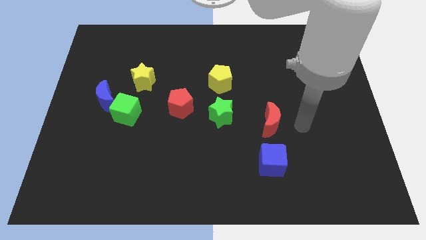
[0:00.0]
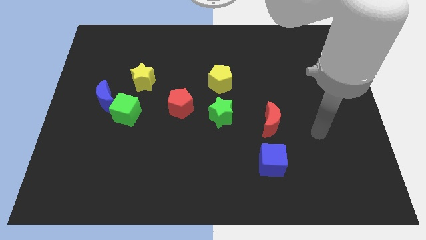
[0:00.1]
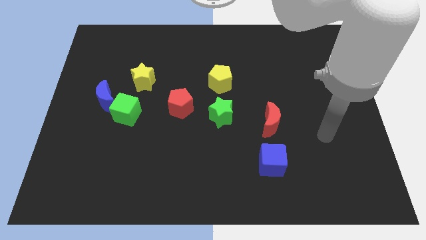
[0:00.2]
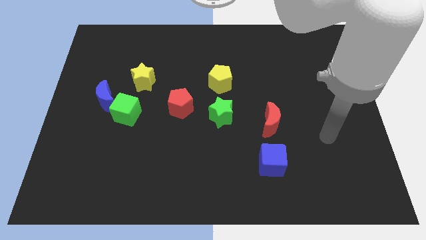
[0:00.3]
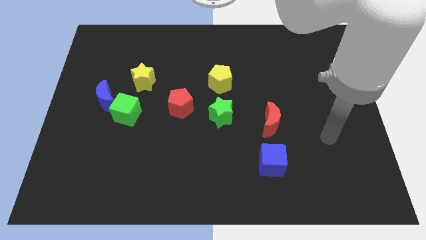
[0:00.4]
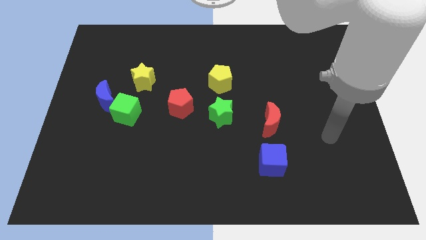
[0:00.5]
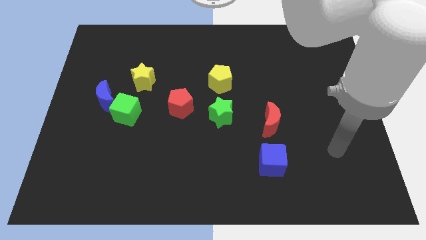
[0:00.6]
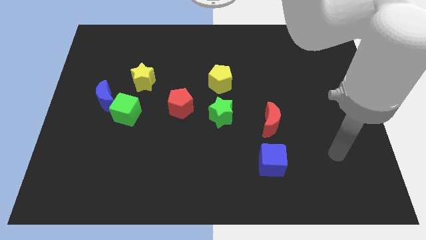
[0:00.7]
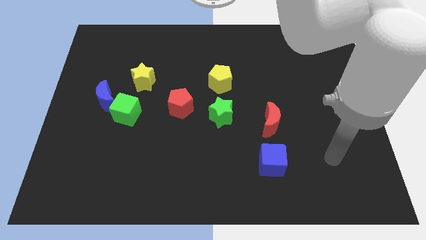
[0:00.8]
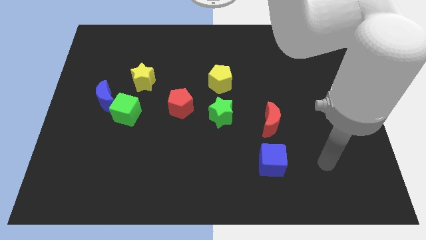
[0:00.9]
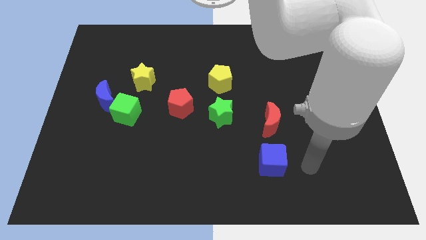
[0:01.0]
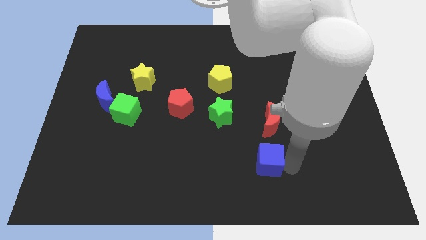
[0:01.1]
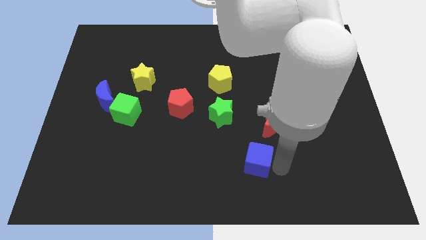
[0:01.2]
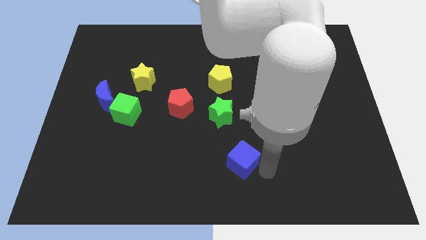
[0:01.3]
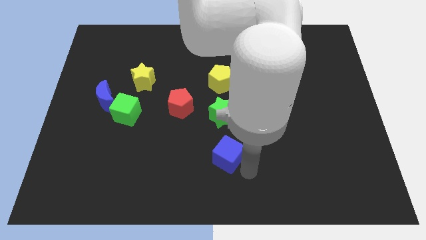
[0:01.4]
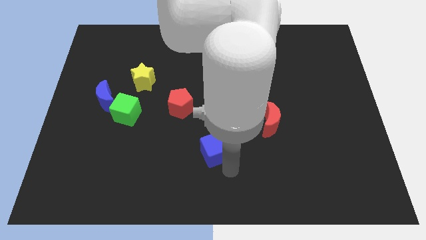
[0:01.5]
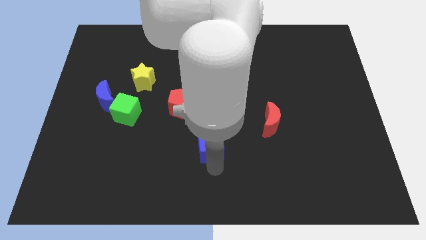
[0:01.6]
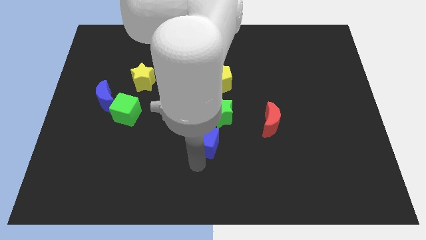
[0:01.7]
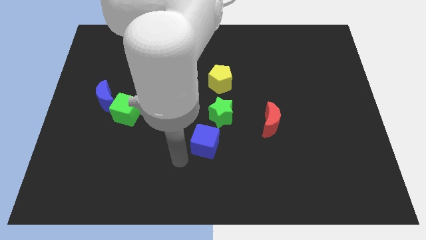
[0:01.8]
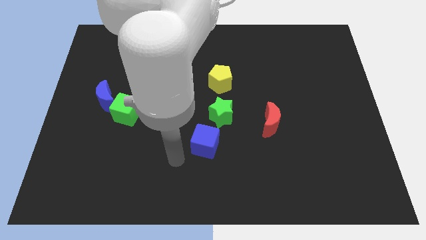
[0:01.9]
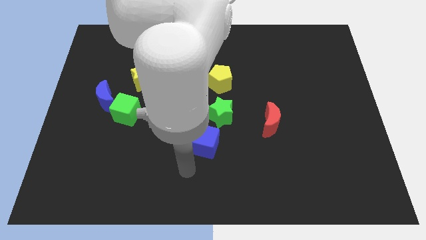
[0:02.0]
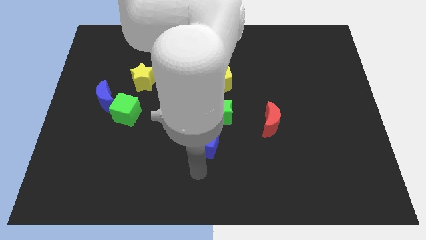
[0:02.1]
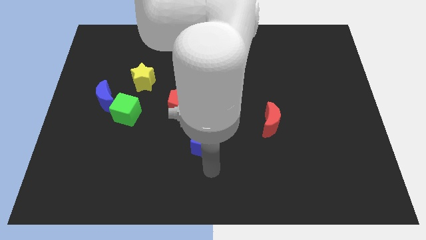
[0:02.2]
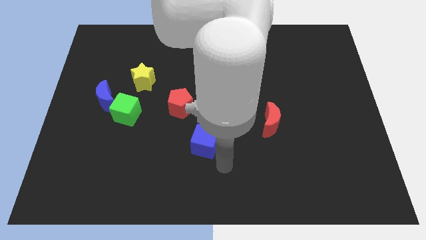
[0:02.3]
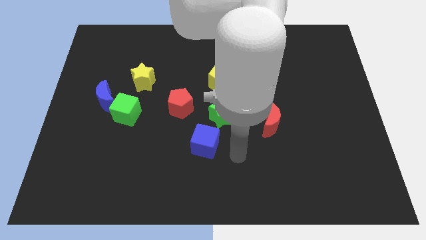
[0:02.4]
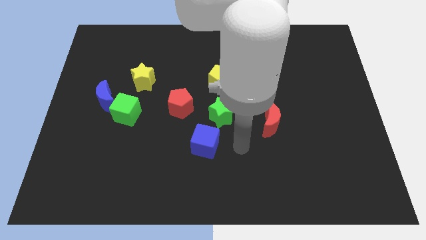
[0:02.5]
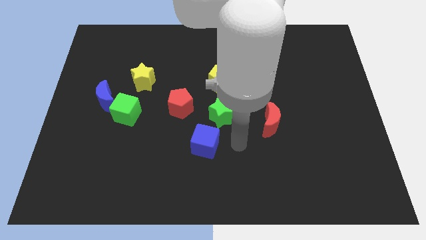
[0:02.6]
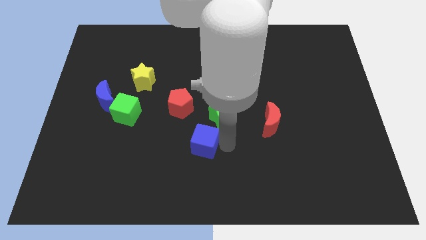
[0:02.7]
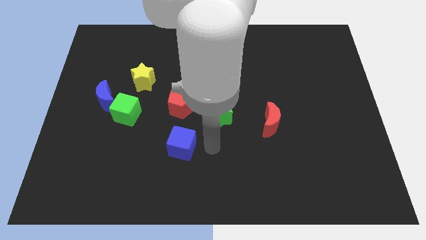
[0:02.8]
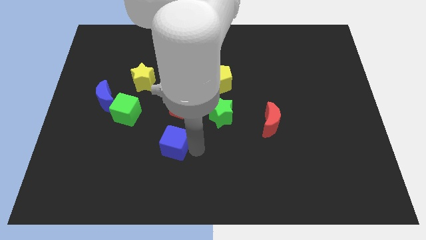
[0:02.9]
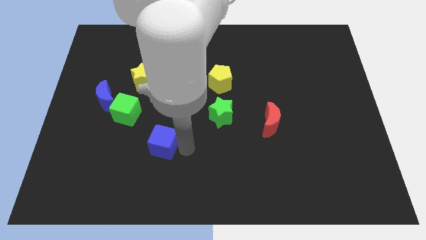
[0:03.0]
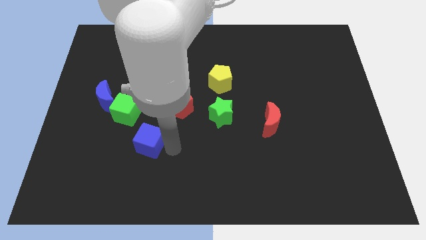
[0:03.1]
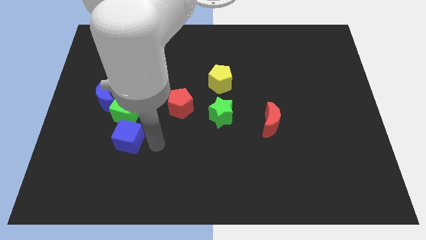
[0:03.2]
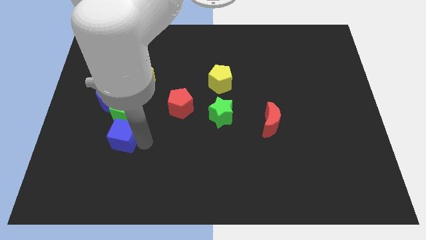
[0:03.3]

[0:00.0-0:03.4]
place the blue cube below the green cube

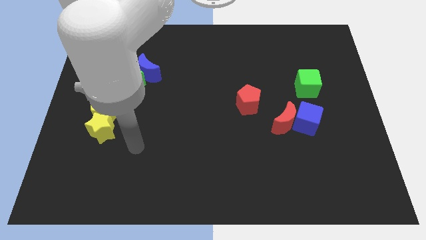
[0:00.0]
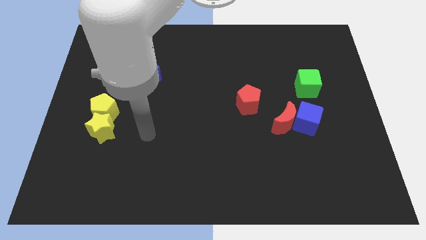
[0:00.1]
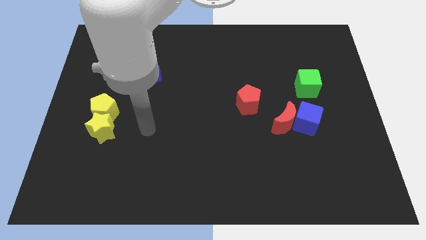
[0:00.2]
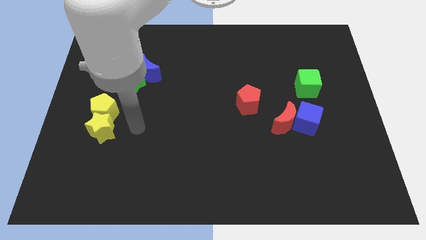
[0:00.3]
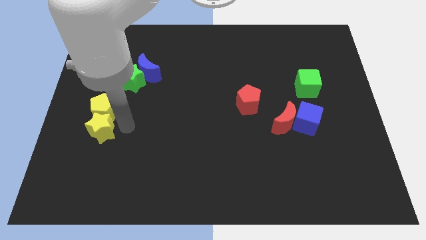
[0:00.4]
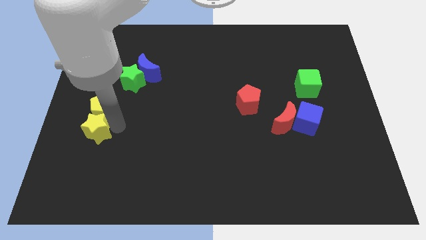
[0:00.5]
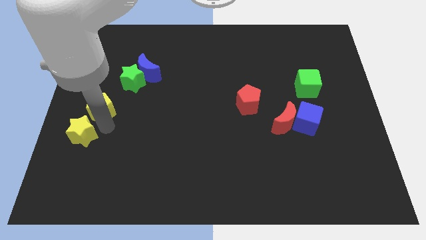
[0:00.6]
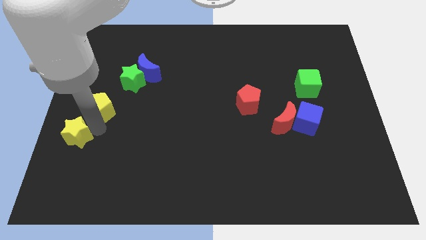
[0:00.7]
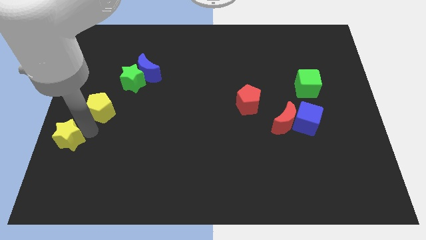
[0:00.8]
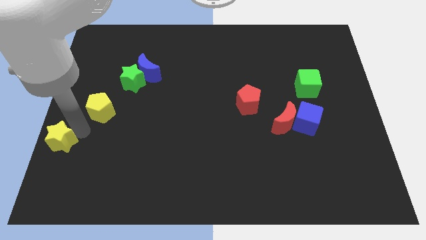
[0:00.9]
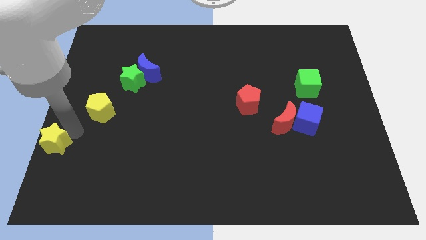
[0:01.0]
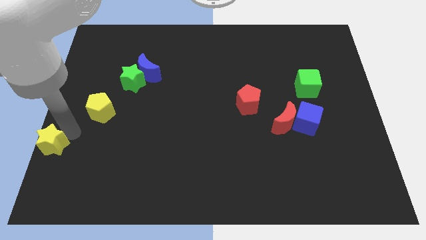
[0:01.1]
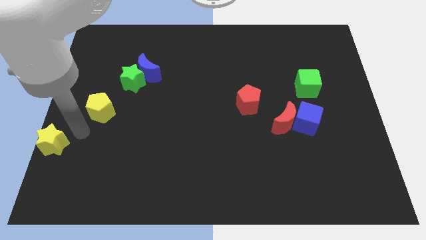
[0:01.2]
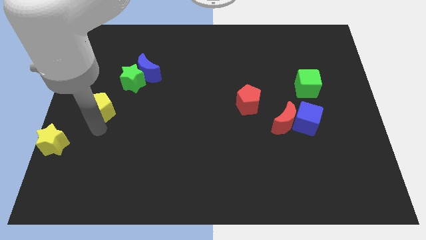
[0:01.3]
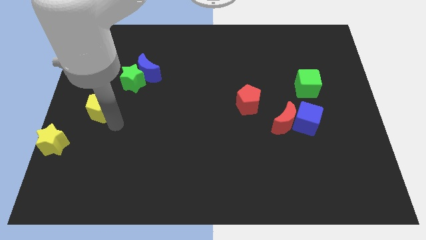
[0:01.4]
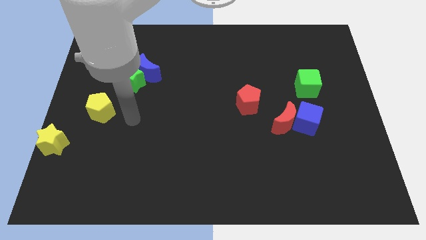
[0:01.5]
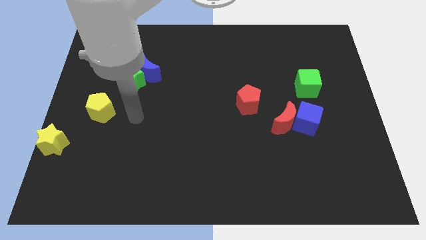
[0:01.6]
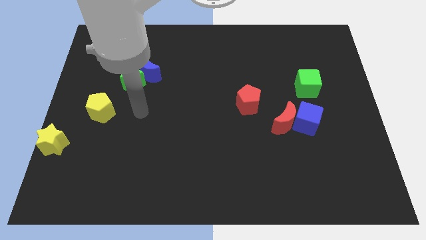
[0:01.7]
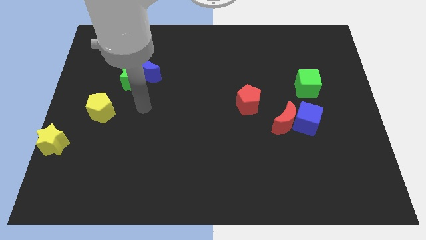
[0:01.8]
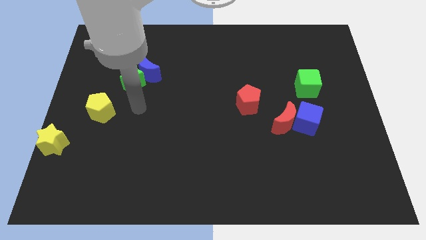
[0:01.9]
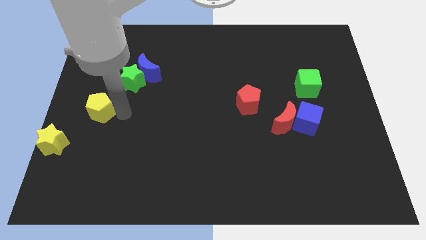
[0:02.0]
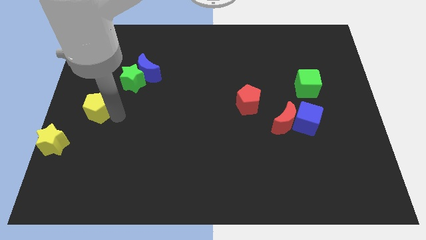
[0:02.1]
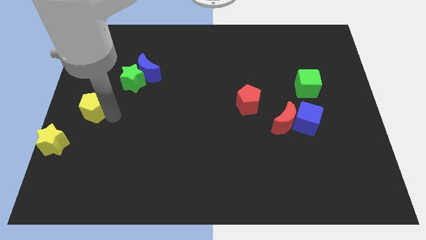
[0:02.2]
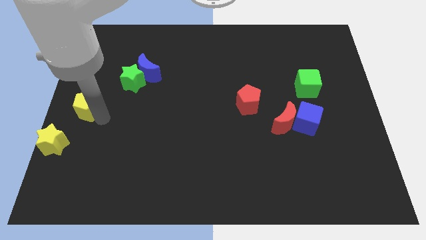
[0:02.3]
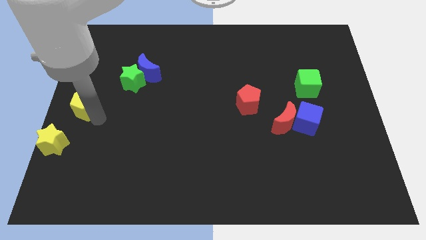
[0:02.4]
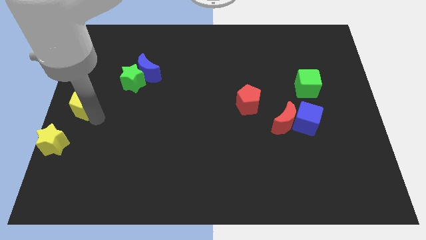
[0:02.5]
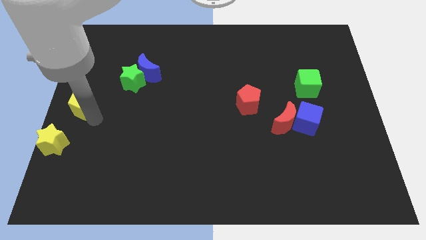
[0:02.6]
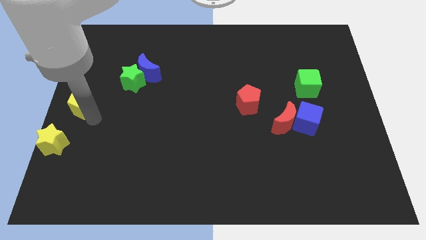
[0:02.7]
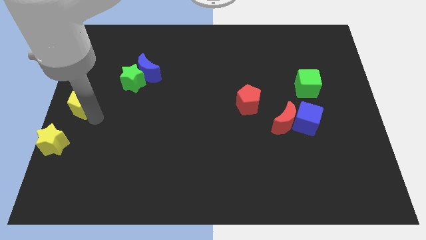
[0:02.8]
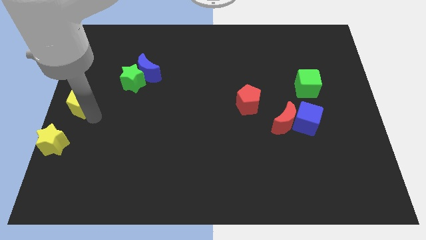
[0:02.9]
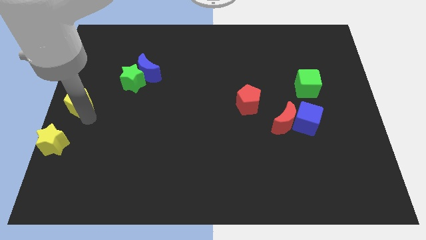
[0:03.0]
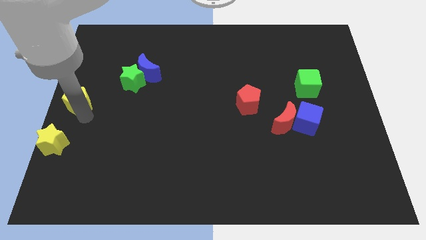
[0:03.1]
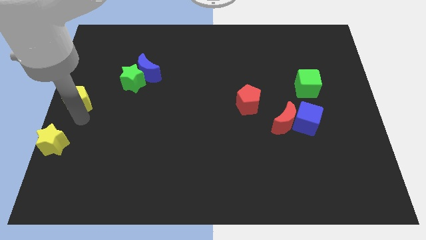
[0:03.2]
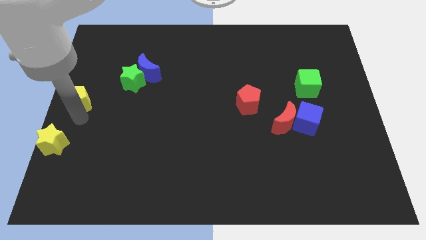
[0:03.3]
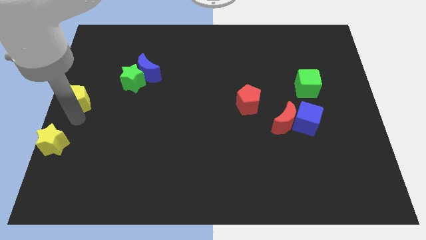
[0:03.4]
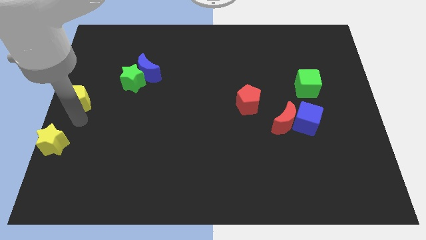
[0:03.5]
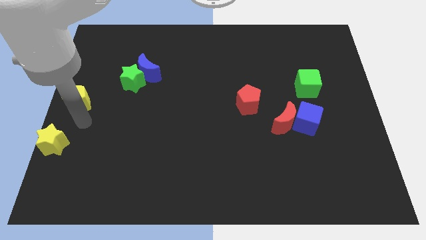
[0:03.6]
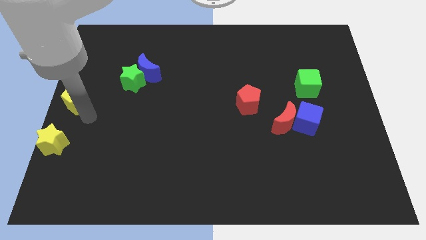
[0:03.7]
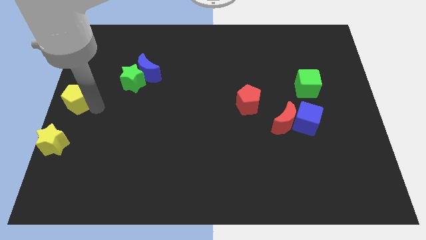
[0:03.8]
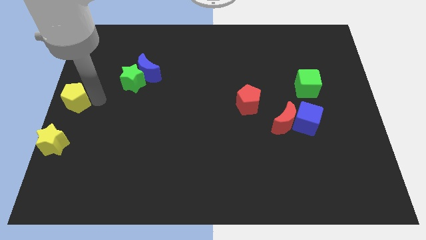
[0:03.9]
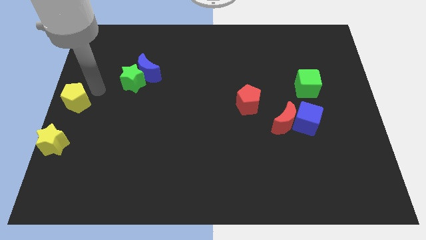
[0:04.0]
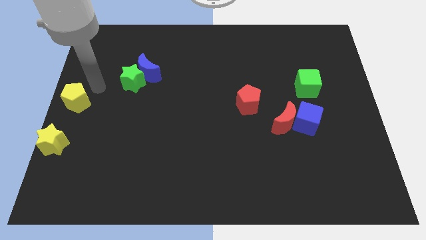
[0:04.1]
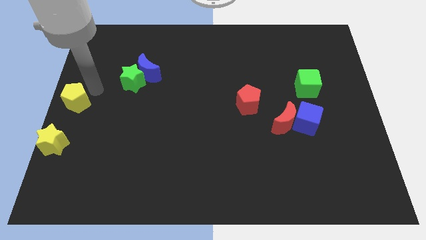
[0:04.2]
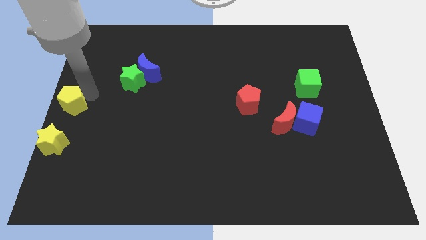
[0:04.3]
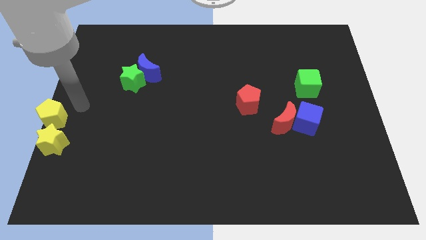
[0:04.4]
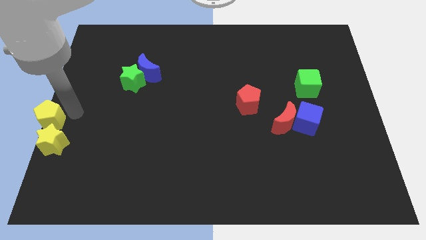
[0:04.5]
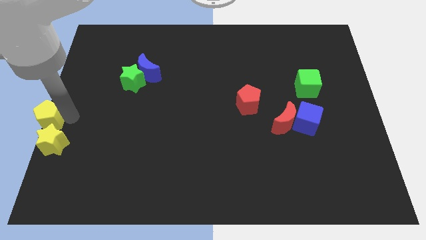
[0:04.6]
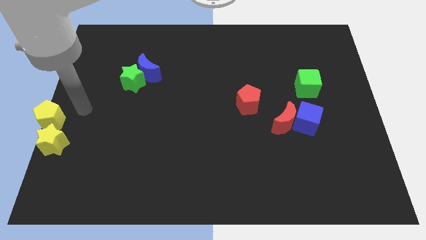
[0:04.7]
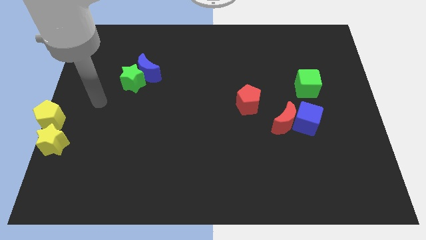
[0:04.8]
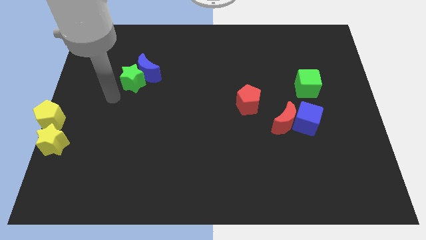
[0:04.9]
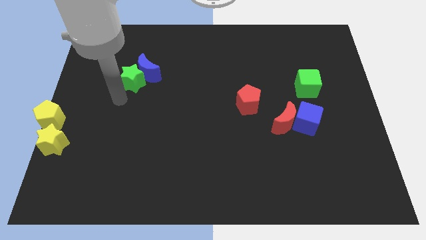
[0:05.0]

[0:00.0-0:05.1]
move the yellow star and yellow pentagon to the left center

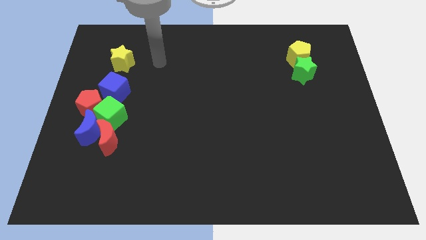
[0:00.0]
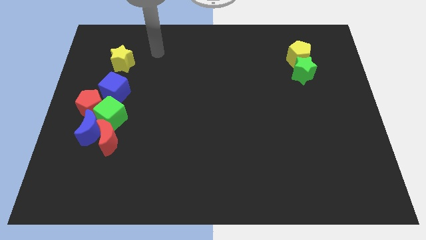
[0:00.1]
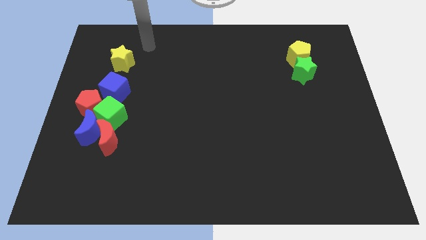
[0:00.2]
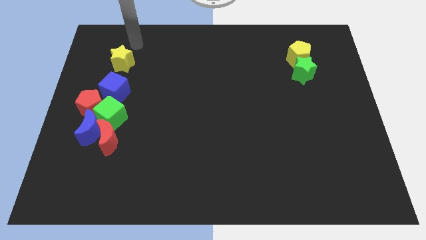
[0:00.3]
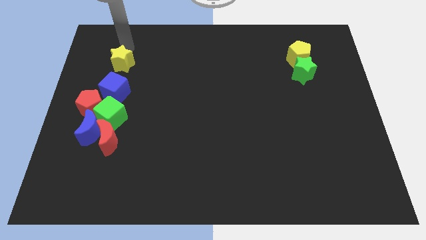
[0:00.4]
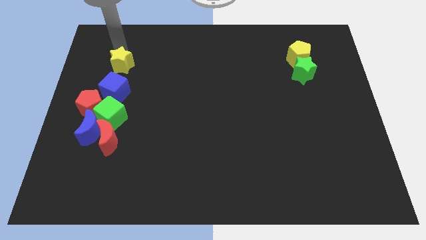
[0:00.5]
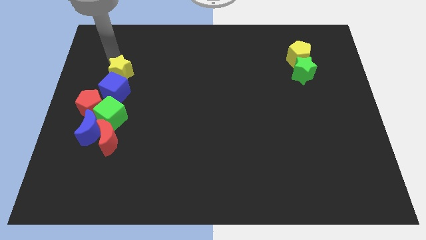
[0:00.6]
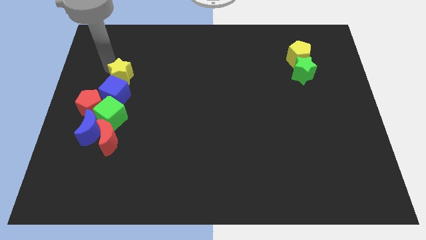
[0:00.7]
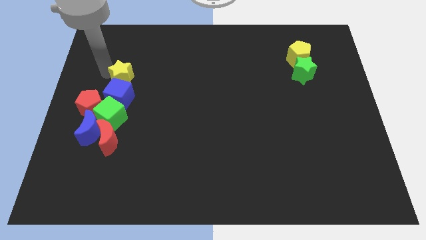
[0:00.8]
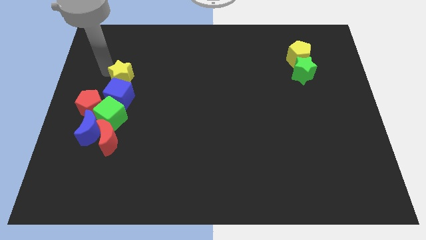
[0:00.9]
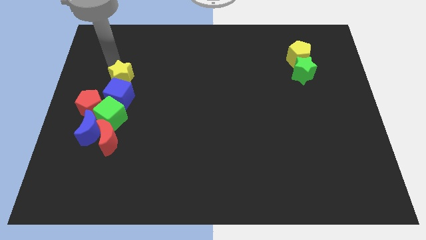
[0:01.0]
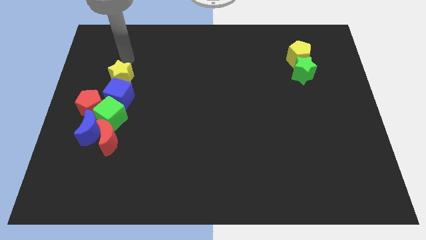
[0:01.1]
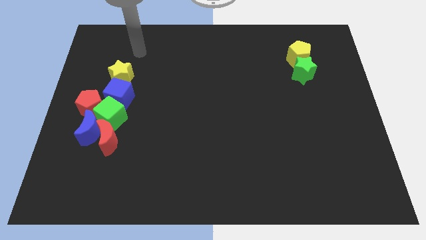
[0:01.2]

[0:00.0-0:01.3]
push the yellow star into the blue cube
